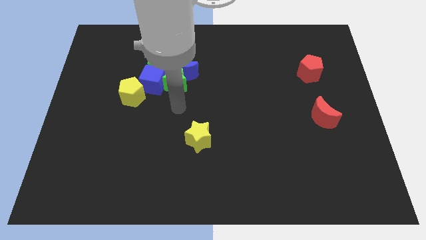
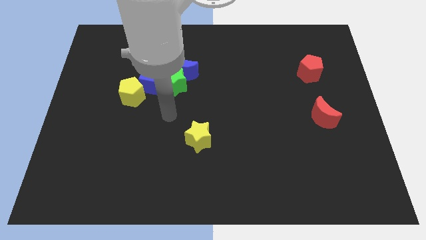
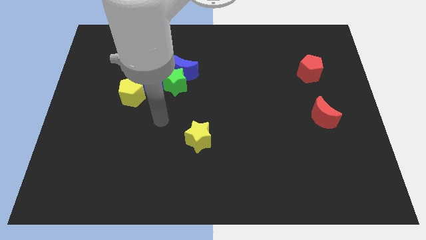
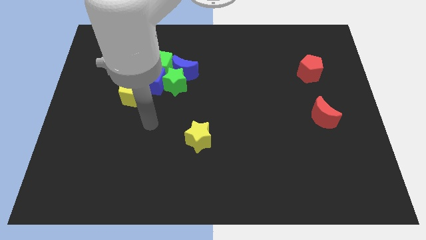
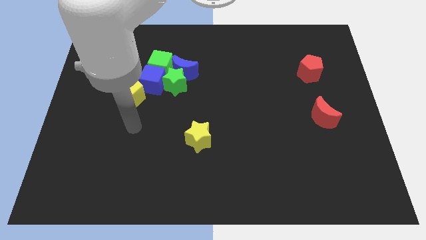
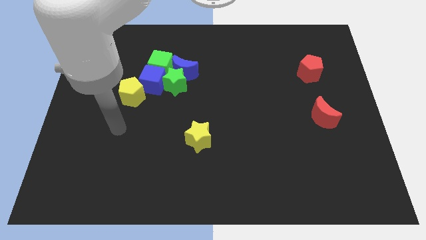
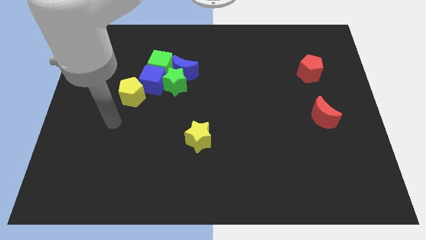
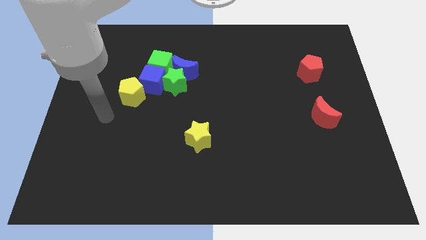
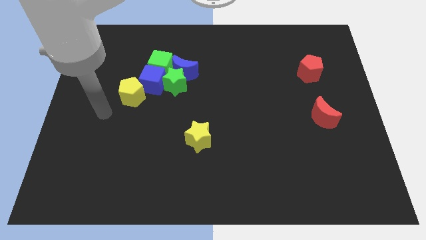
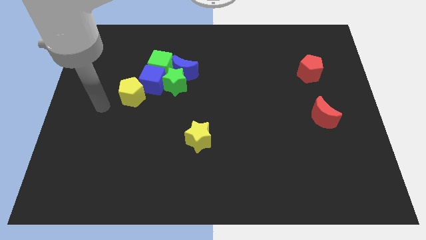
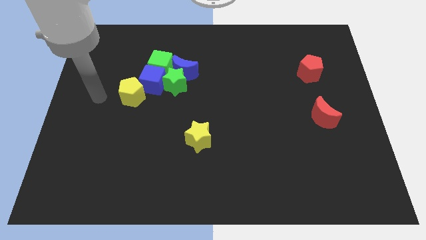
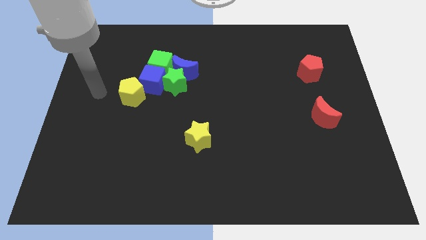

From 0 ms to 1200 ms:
place your arm to the left of yellow pentagon

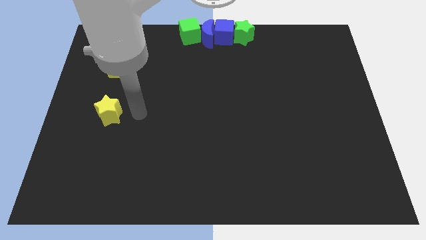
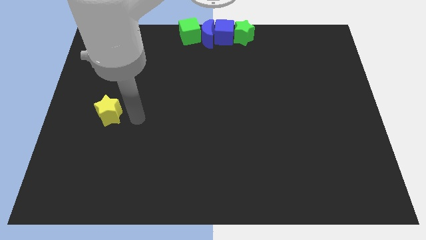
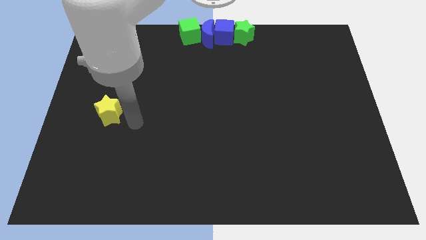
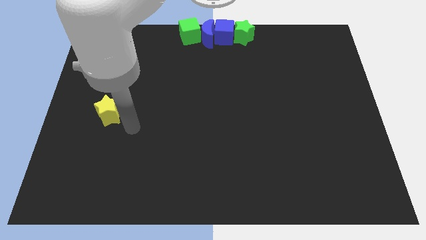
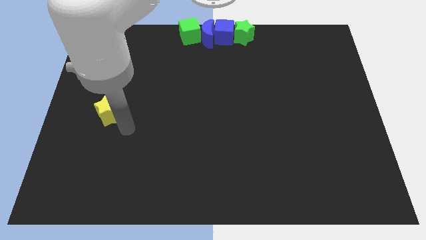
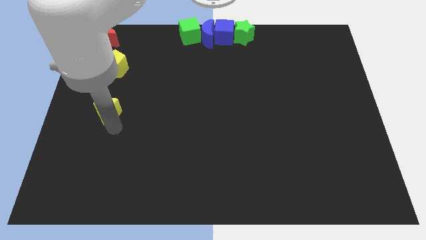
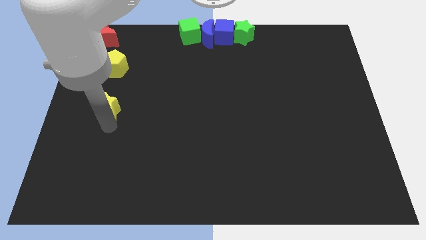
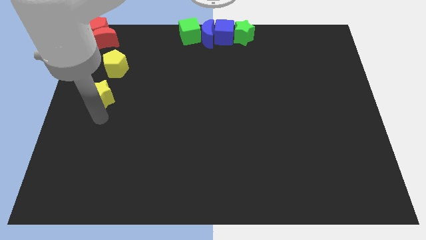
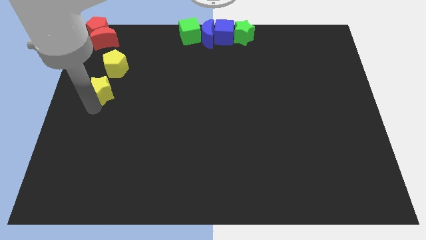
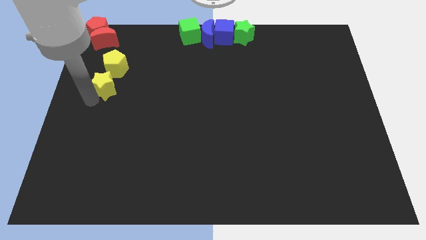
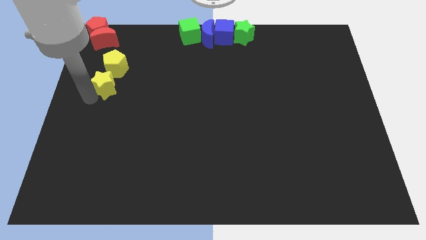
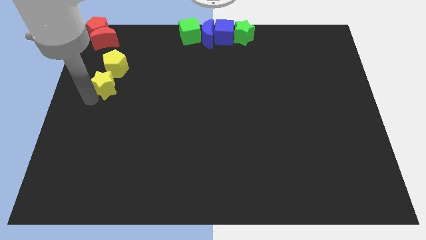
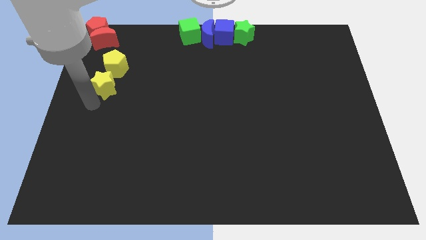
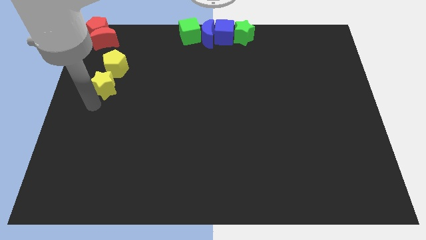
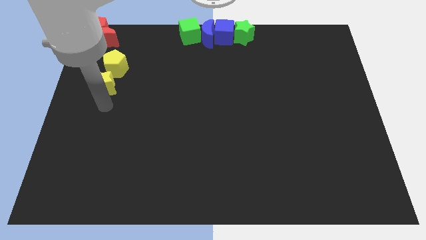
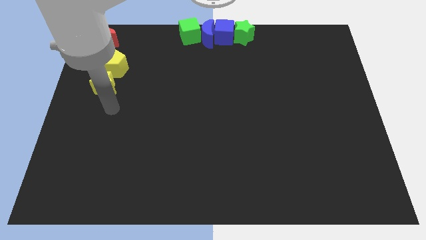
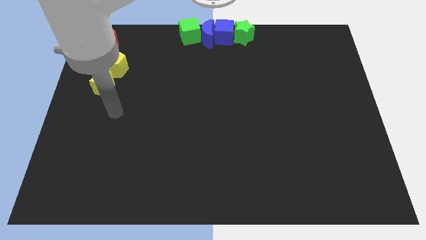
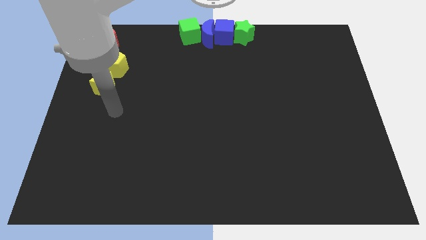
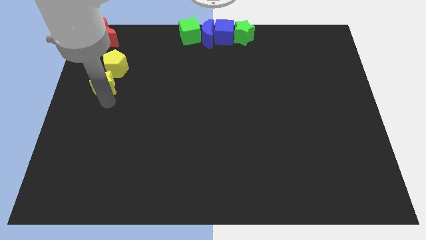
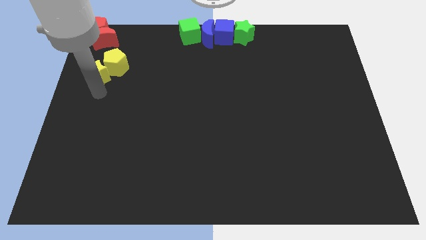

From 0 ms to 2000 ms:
put the yellow blocks together below the red blocks

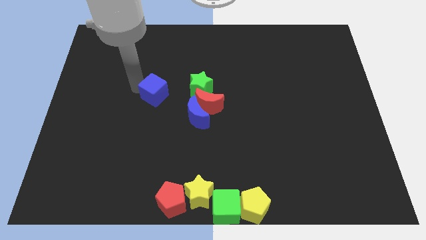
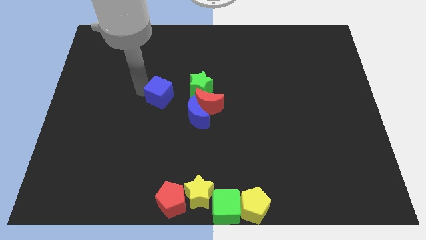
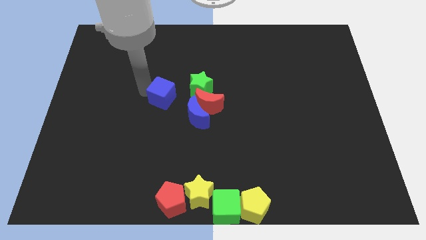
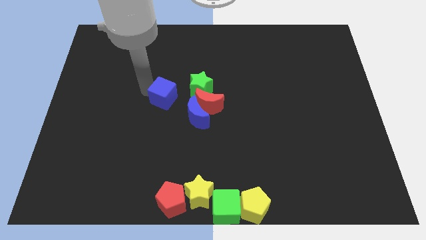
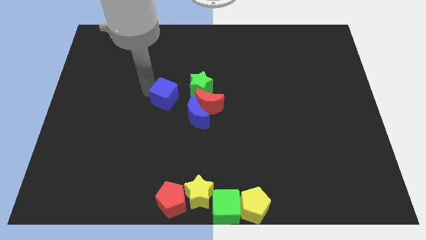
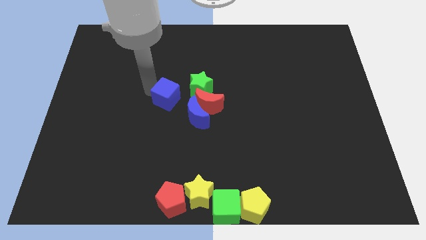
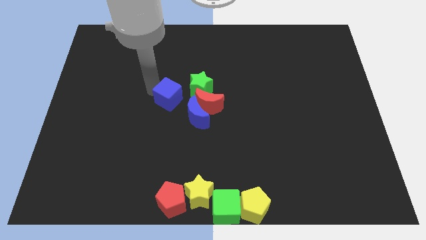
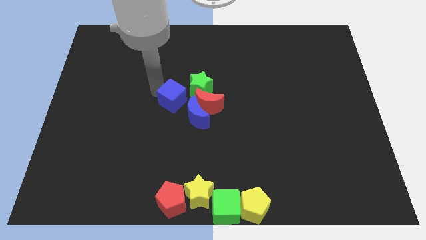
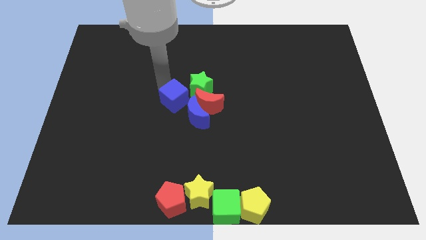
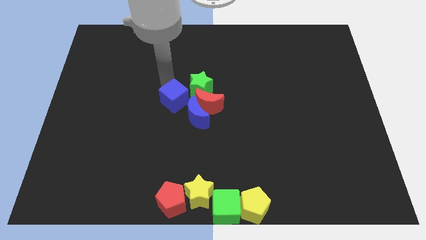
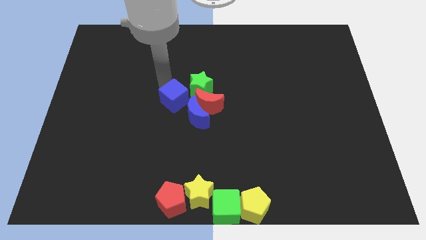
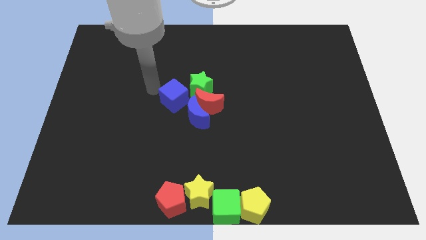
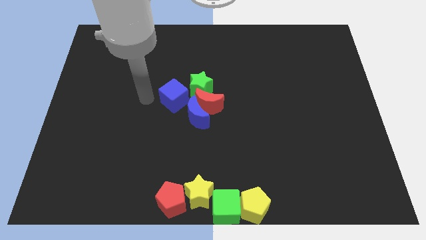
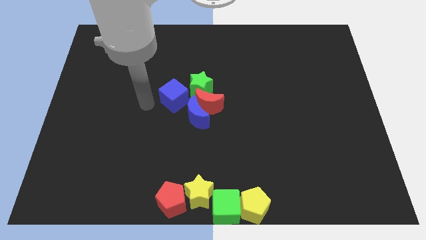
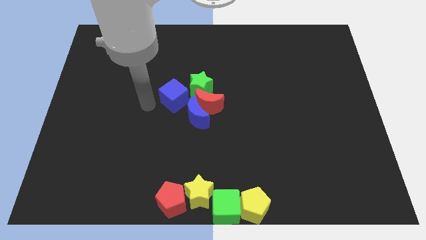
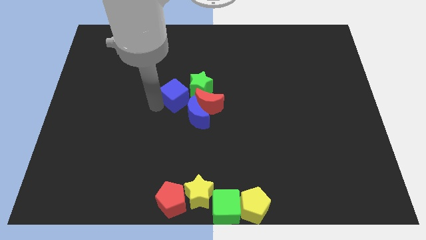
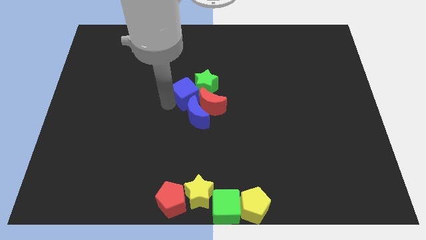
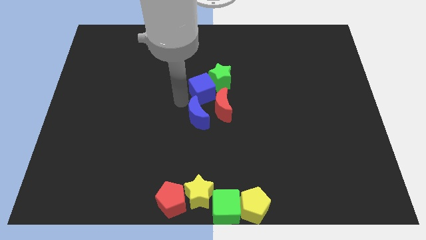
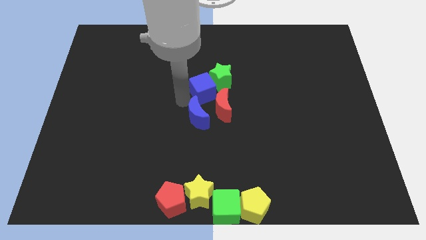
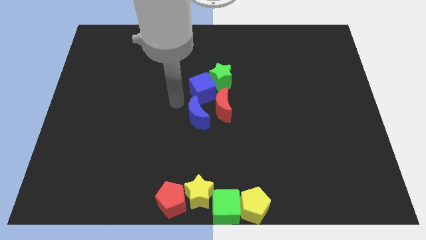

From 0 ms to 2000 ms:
push the blue cube into green star

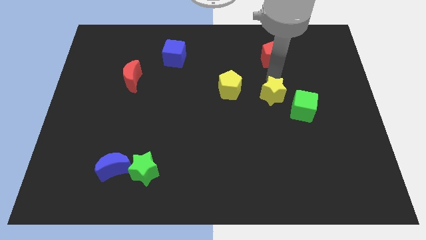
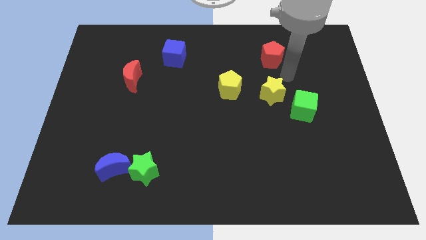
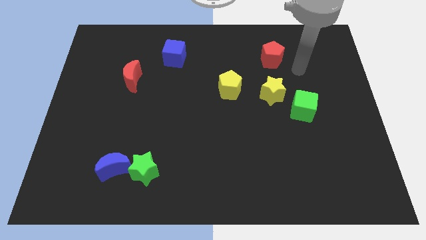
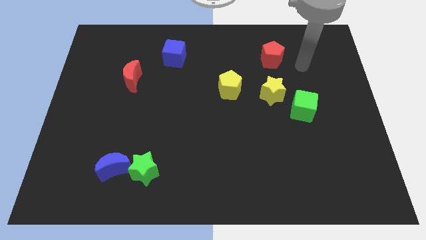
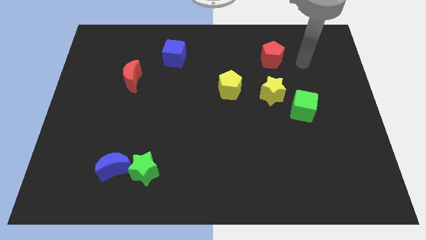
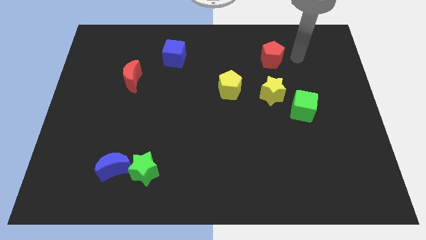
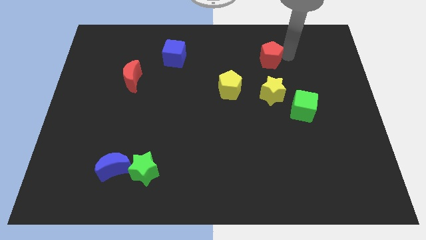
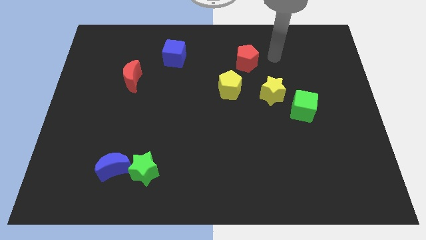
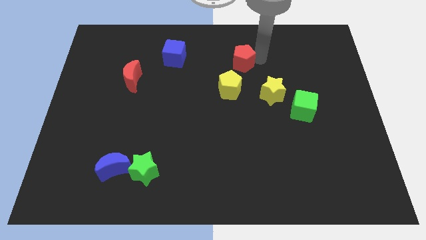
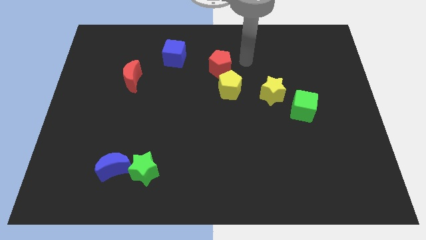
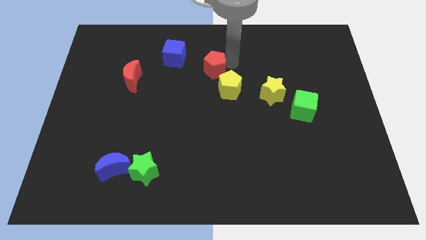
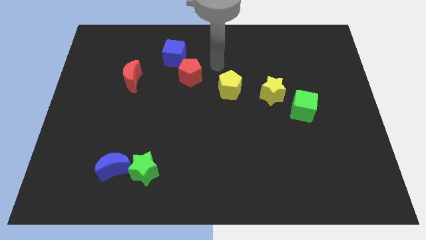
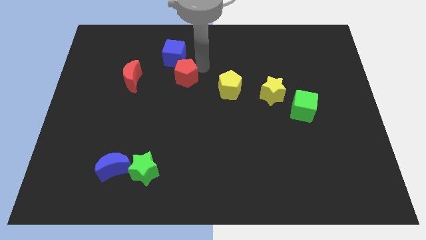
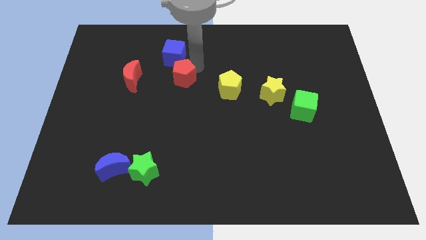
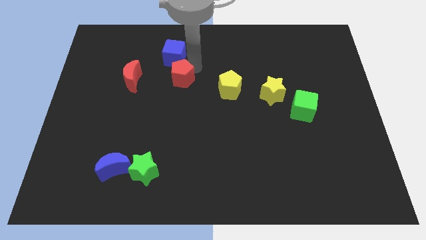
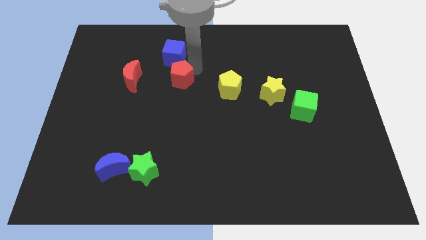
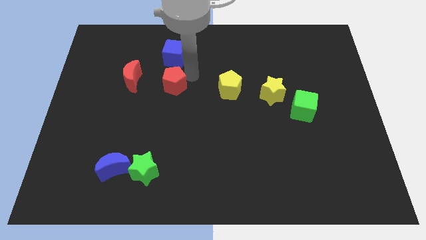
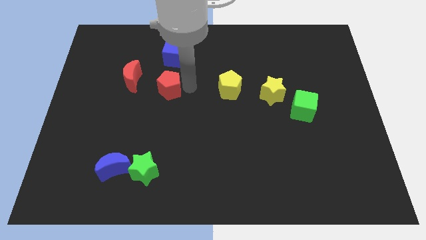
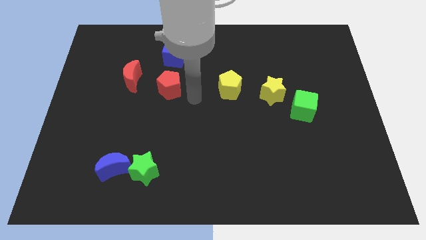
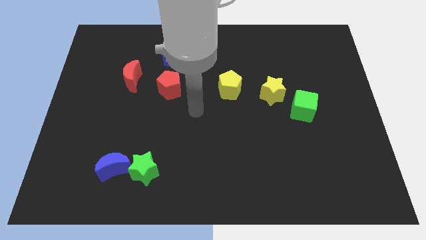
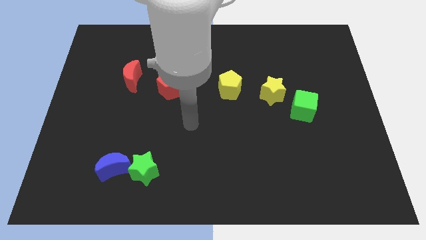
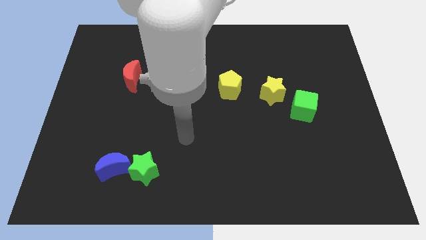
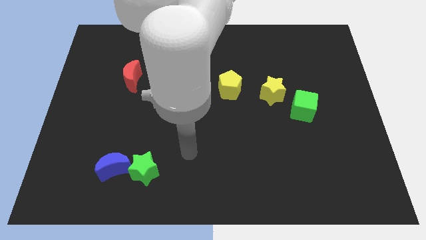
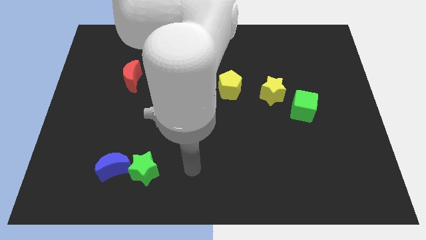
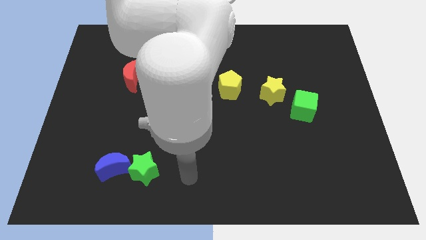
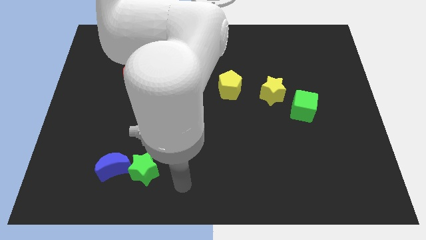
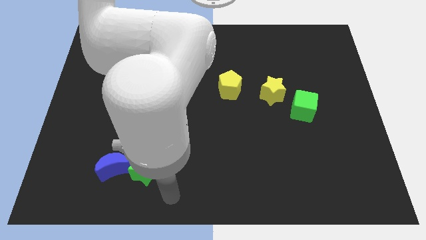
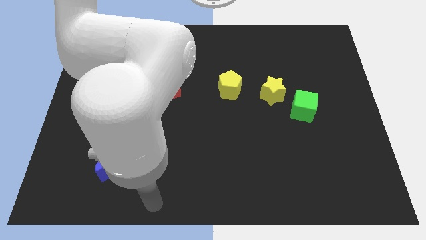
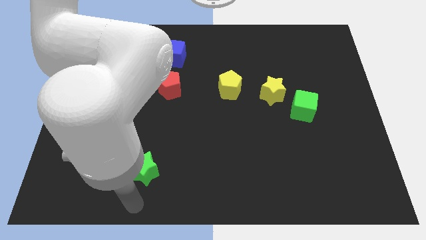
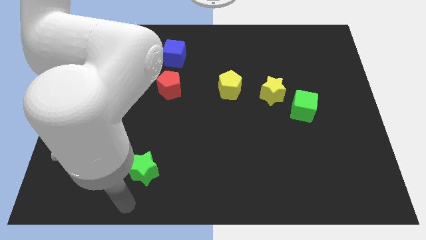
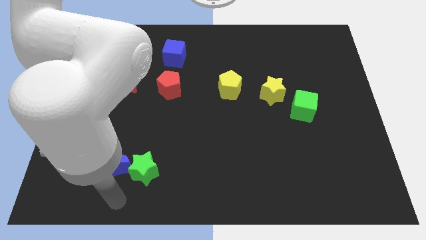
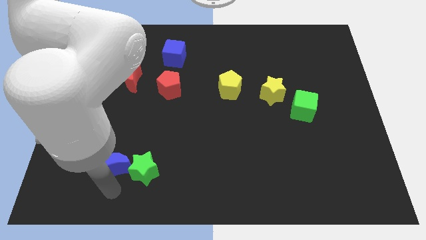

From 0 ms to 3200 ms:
place the red pentagon below the blue cube

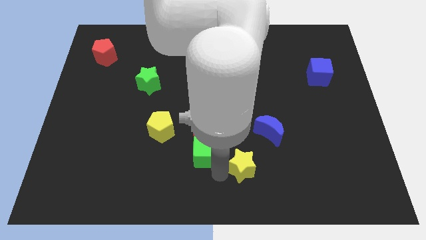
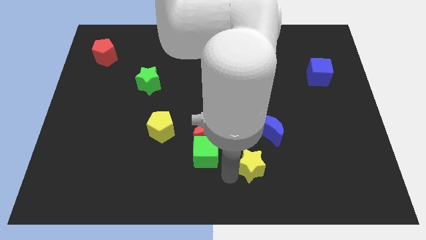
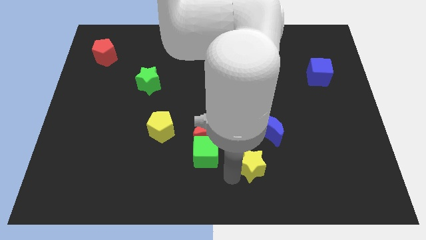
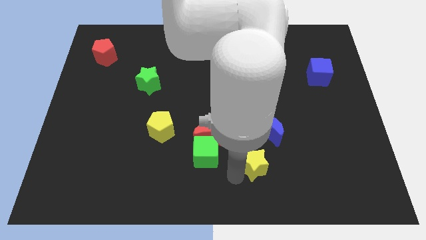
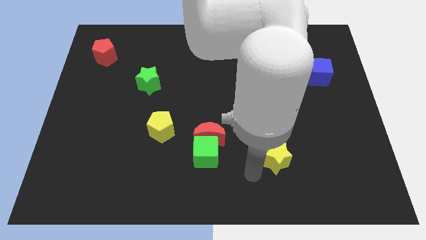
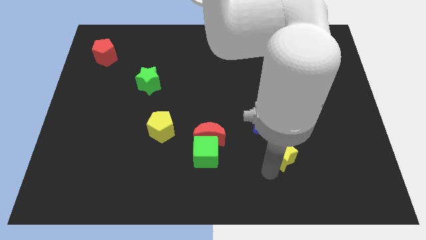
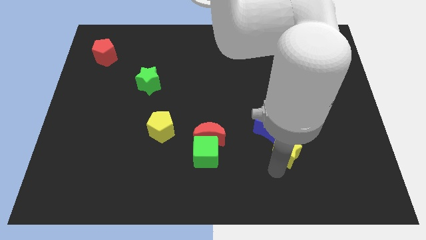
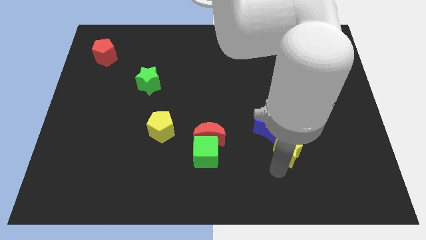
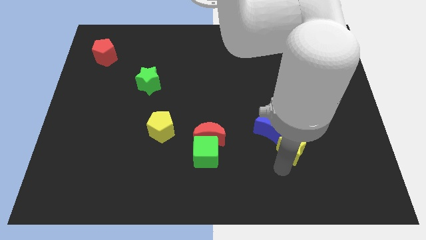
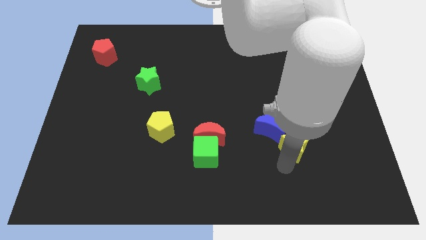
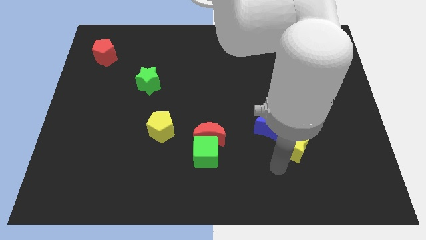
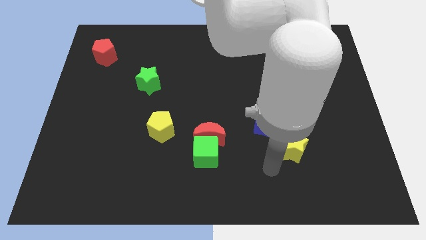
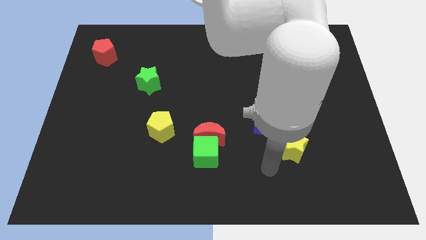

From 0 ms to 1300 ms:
make the yellow star to touch the blue crescent
